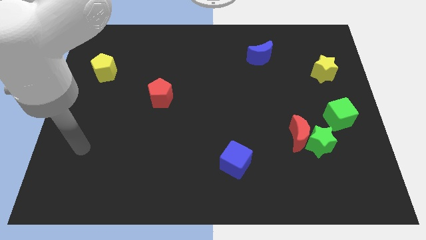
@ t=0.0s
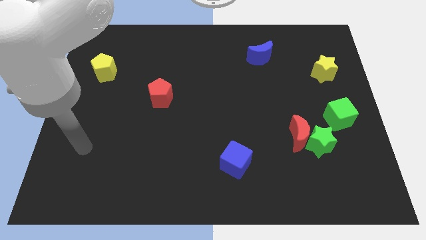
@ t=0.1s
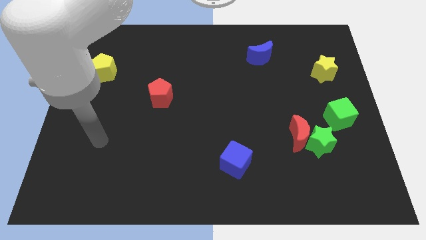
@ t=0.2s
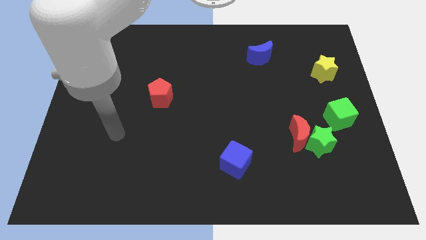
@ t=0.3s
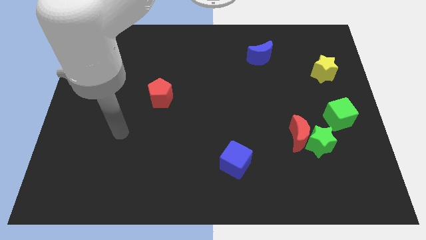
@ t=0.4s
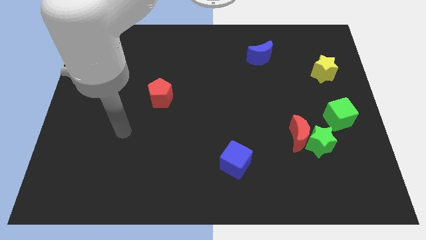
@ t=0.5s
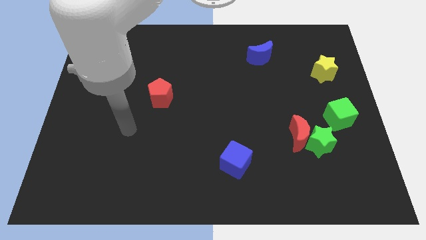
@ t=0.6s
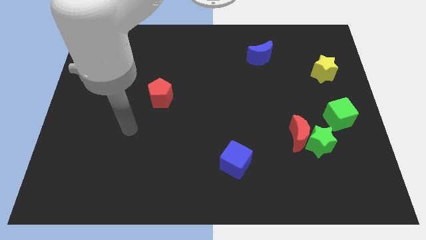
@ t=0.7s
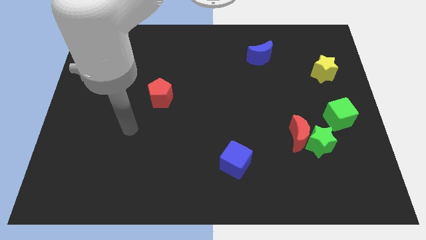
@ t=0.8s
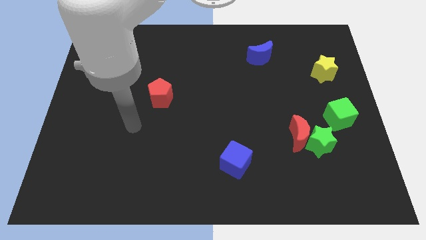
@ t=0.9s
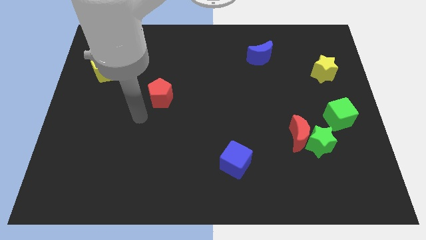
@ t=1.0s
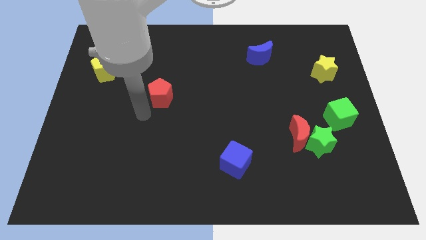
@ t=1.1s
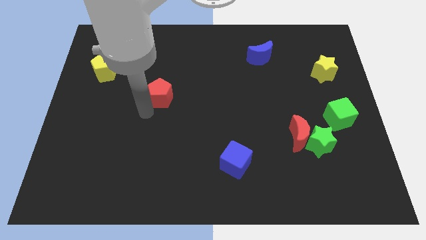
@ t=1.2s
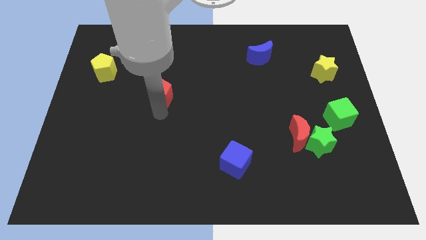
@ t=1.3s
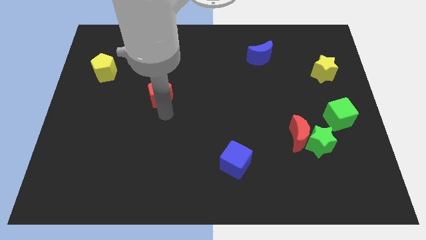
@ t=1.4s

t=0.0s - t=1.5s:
place your hand below the red pentagon

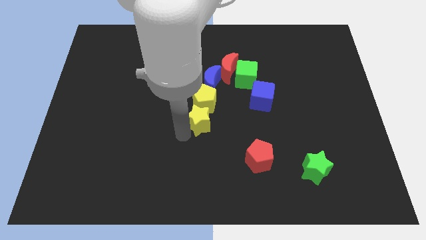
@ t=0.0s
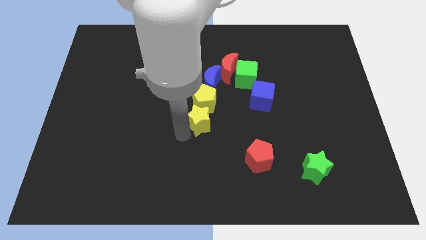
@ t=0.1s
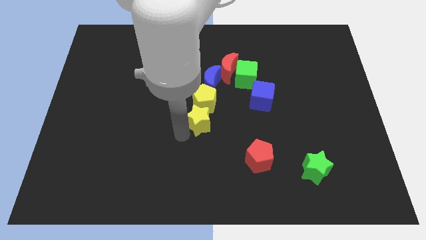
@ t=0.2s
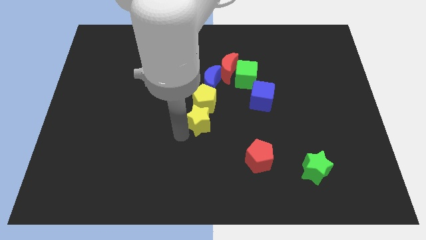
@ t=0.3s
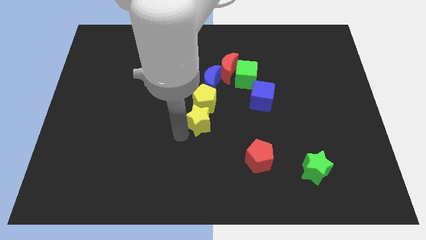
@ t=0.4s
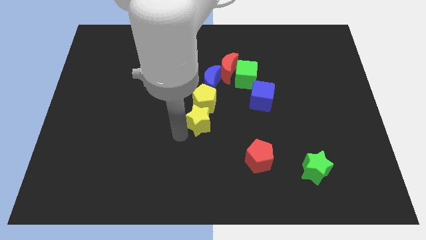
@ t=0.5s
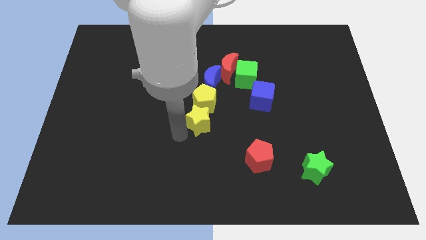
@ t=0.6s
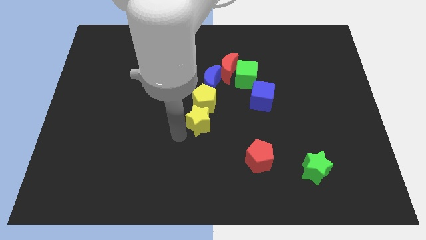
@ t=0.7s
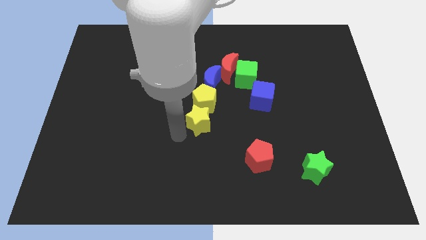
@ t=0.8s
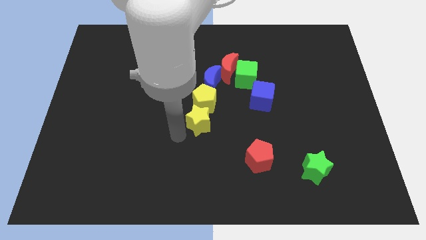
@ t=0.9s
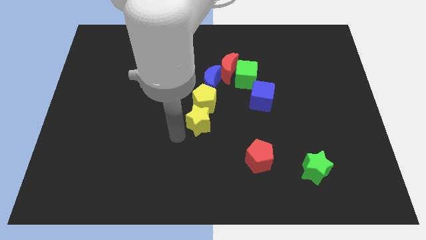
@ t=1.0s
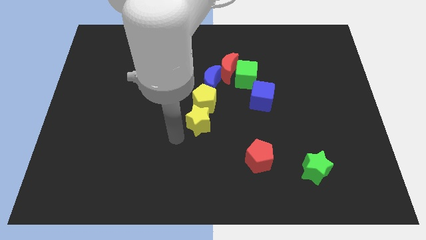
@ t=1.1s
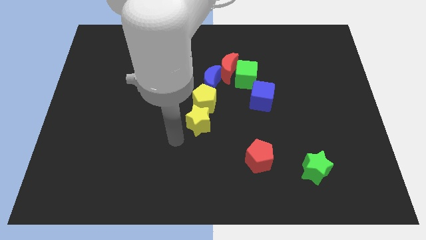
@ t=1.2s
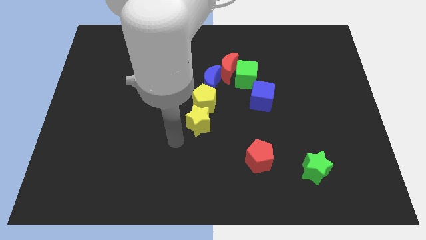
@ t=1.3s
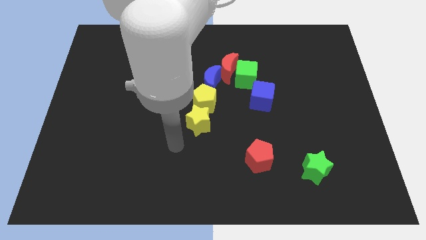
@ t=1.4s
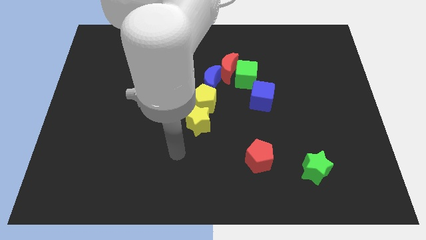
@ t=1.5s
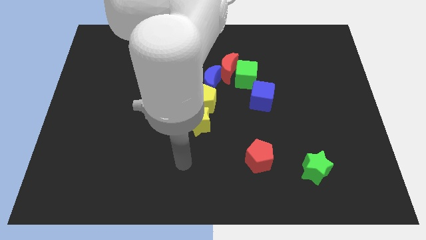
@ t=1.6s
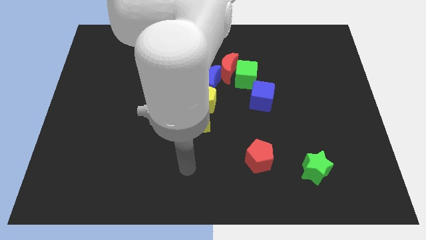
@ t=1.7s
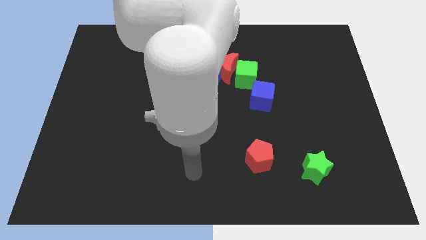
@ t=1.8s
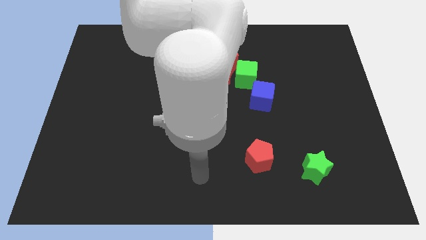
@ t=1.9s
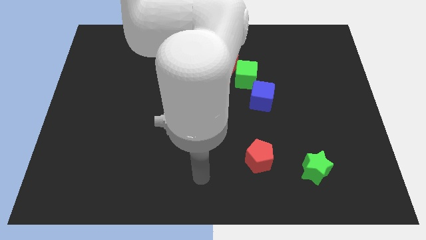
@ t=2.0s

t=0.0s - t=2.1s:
move the arm away from the yellow star

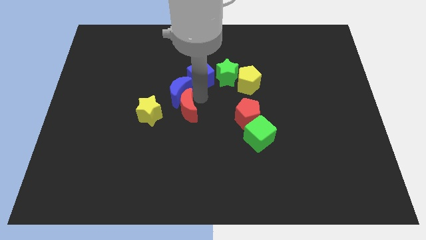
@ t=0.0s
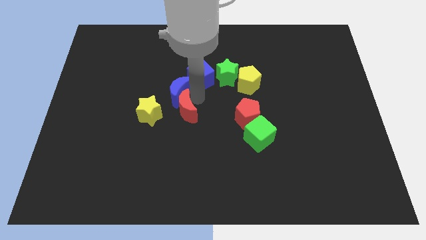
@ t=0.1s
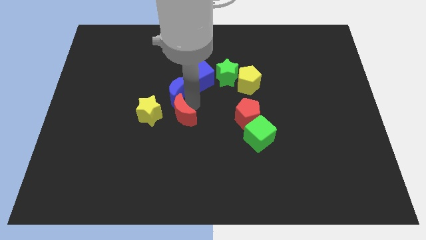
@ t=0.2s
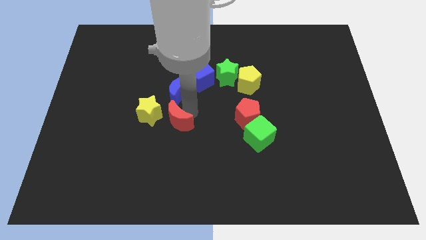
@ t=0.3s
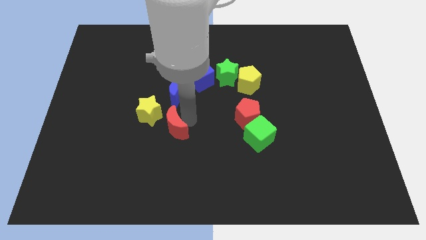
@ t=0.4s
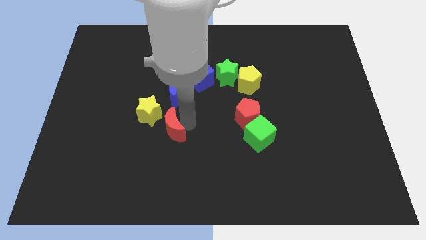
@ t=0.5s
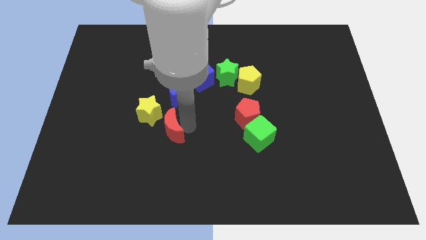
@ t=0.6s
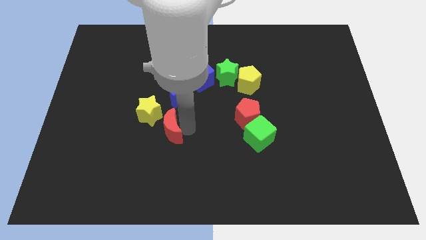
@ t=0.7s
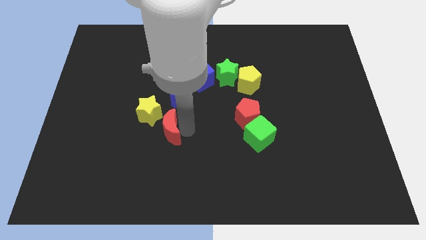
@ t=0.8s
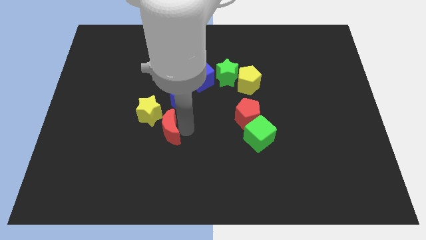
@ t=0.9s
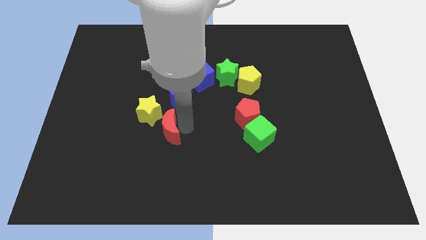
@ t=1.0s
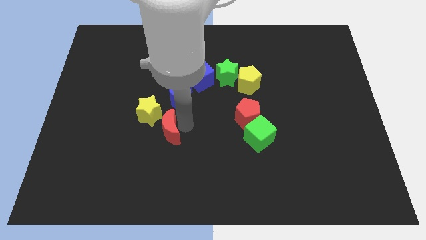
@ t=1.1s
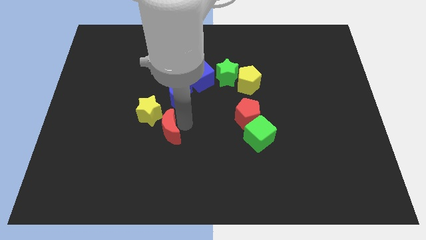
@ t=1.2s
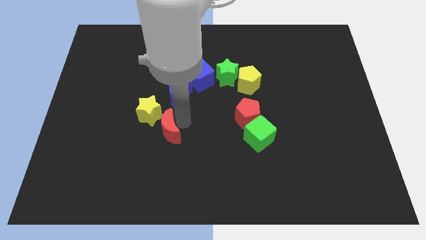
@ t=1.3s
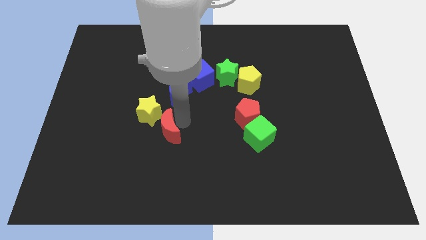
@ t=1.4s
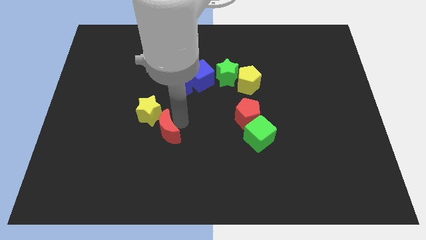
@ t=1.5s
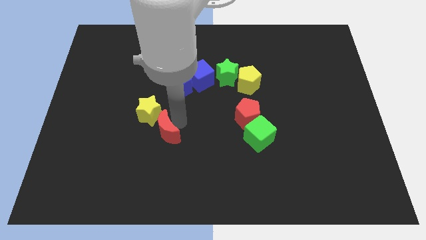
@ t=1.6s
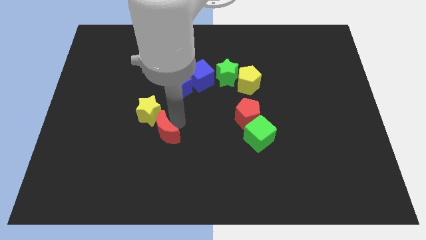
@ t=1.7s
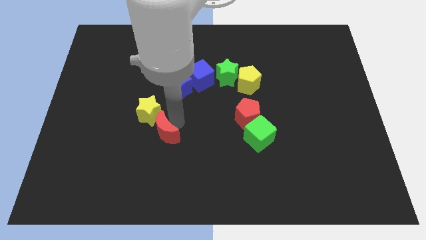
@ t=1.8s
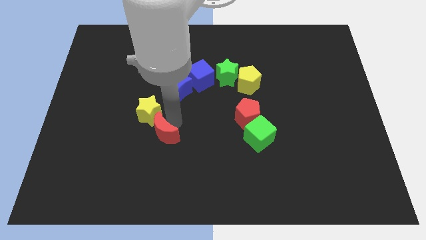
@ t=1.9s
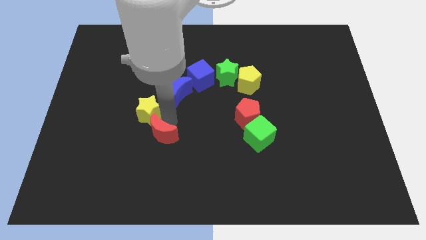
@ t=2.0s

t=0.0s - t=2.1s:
move the red crescent away from the blue crescent

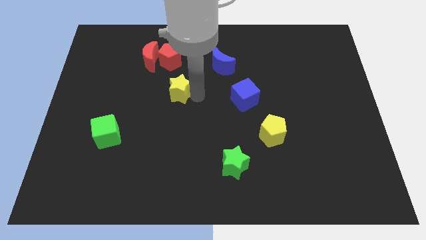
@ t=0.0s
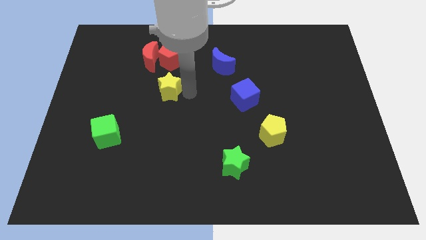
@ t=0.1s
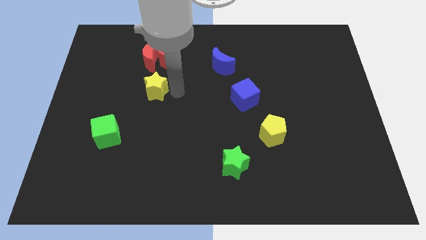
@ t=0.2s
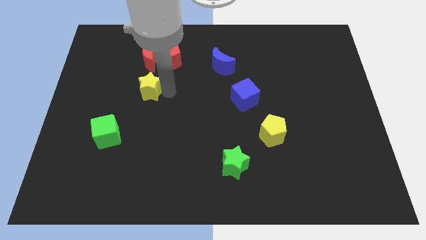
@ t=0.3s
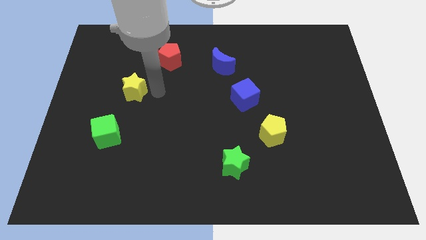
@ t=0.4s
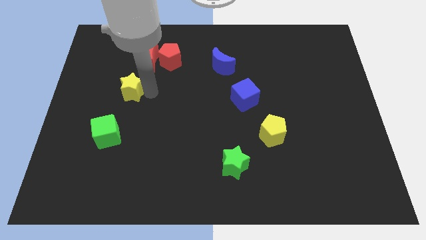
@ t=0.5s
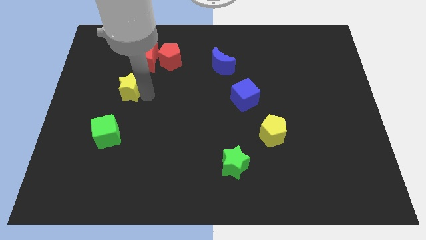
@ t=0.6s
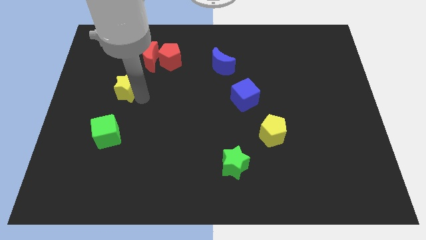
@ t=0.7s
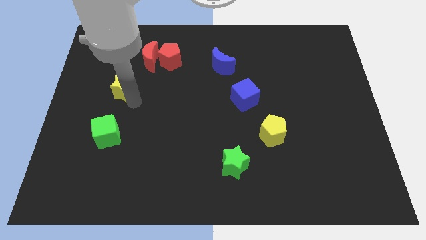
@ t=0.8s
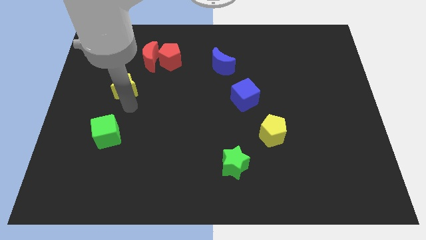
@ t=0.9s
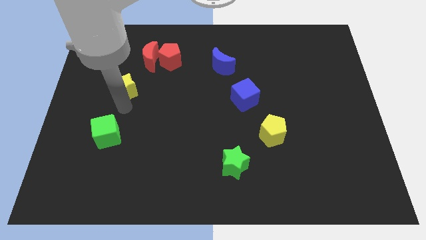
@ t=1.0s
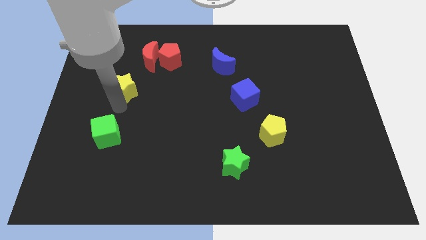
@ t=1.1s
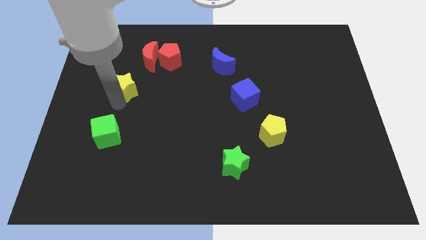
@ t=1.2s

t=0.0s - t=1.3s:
push the yellow star towards the left side of the board

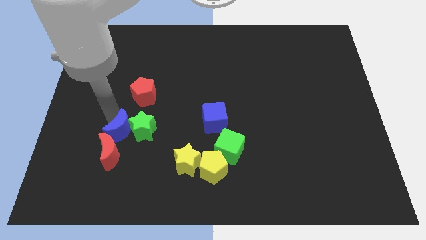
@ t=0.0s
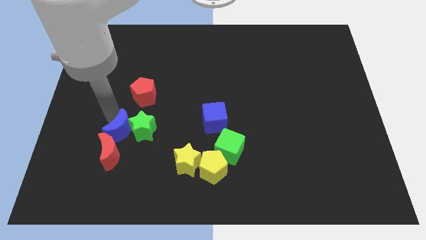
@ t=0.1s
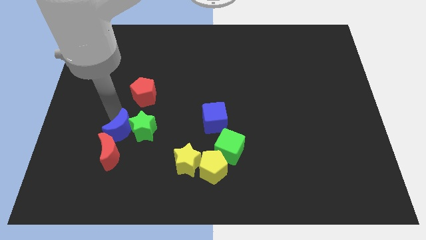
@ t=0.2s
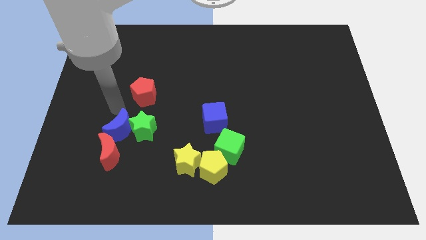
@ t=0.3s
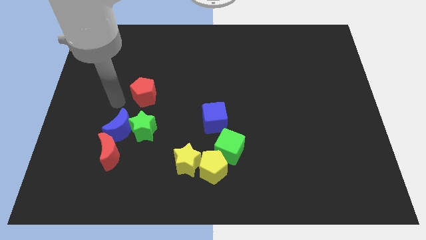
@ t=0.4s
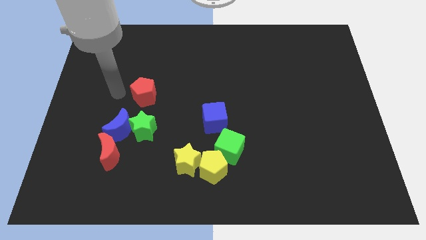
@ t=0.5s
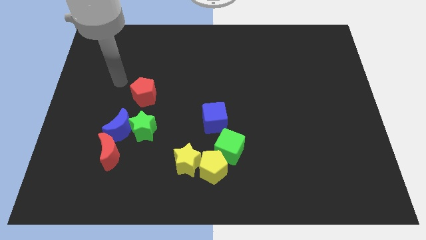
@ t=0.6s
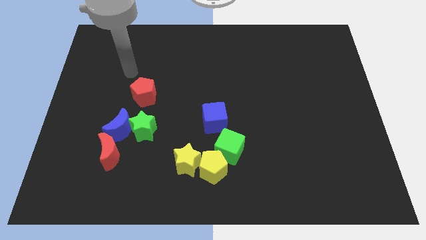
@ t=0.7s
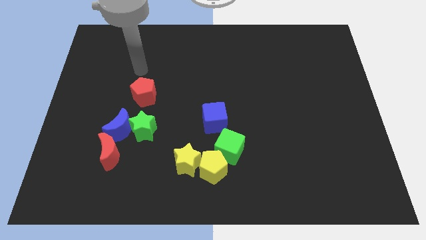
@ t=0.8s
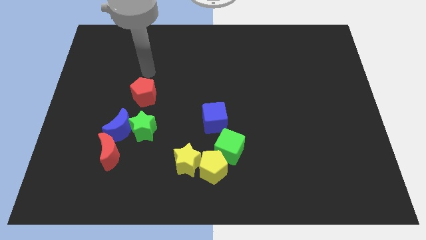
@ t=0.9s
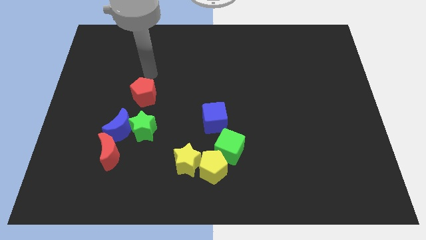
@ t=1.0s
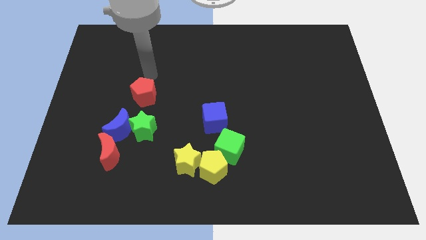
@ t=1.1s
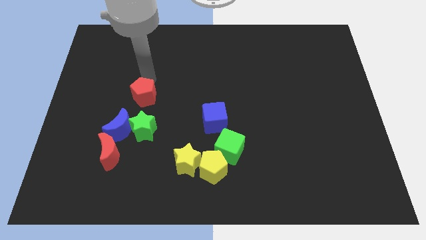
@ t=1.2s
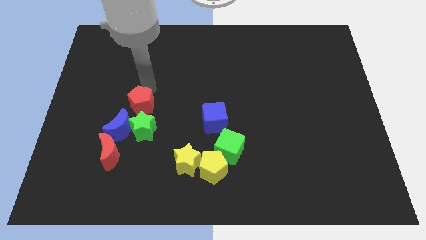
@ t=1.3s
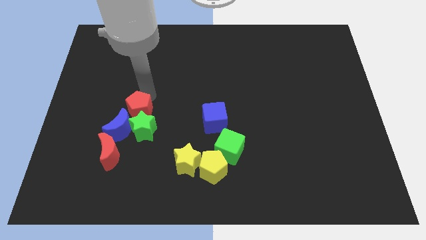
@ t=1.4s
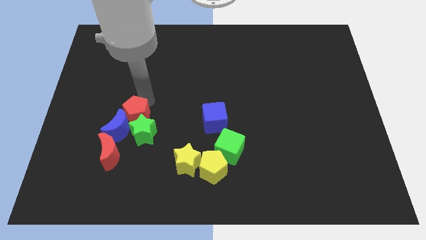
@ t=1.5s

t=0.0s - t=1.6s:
place the red pentagon into the green star

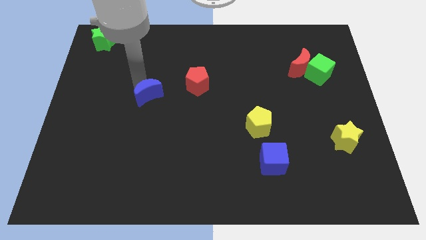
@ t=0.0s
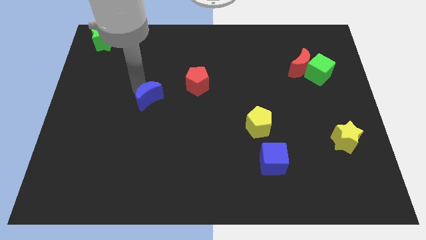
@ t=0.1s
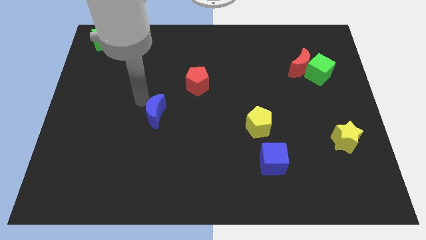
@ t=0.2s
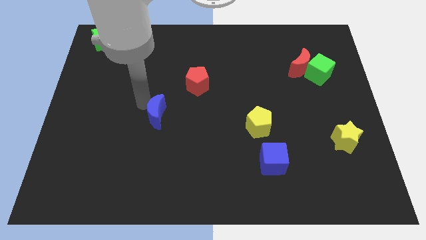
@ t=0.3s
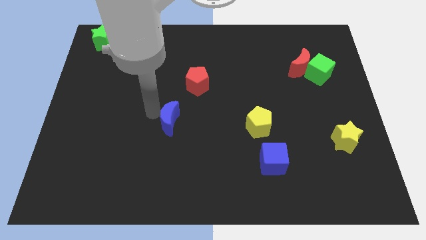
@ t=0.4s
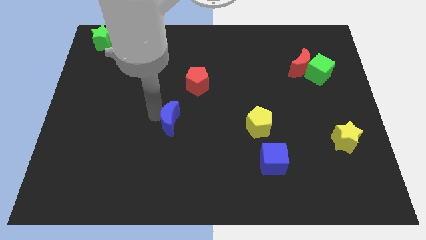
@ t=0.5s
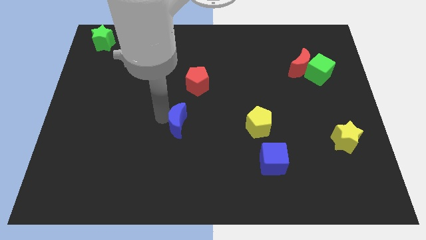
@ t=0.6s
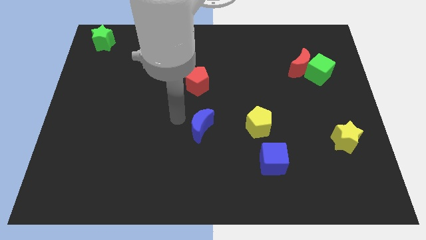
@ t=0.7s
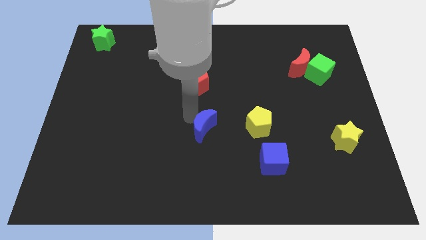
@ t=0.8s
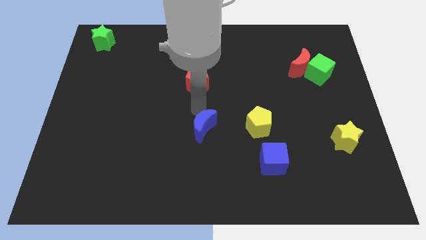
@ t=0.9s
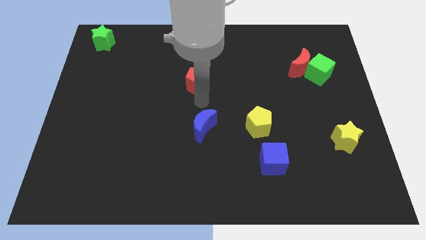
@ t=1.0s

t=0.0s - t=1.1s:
move the blue crescent to the center of the board
